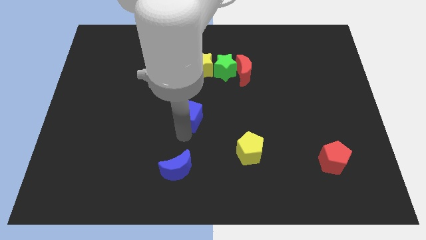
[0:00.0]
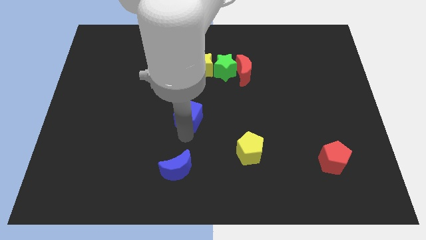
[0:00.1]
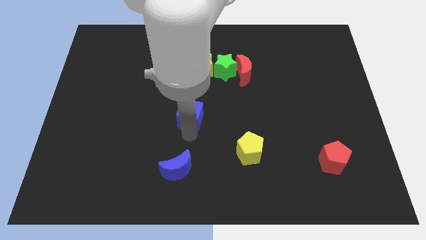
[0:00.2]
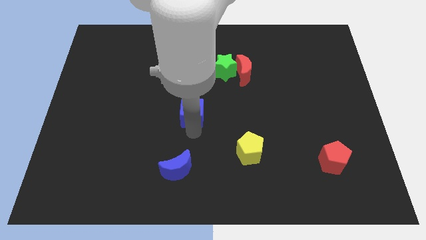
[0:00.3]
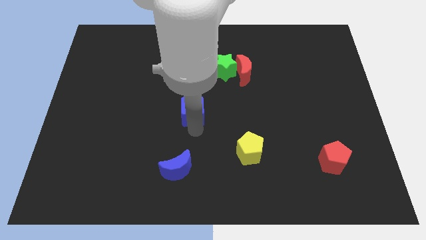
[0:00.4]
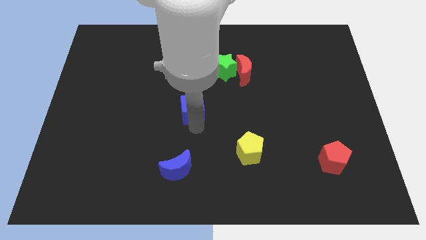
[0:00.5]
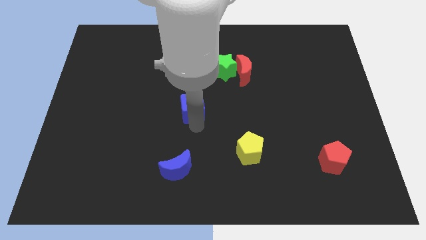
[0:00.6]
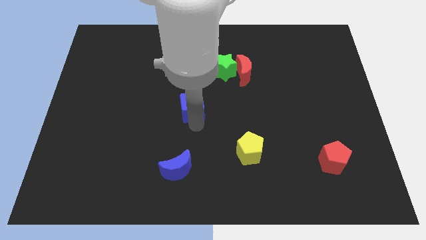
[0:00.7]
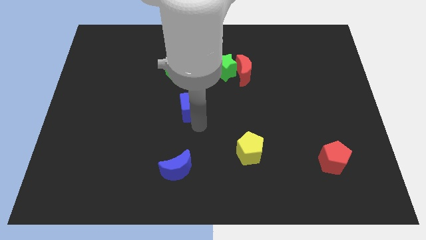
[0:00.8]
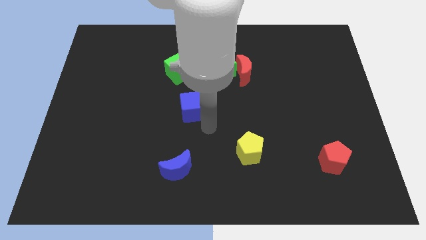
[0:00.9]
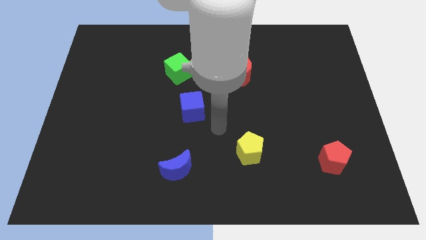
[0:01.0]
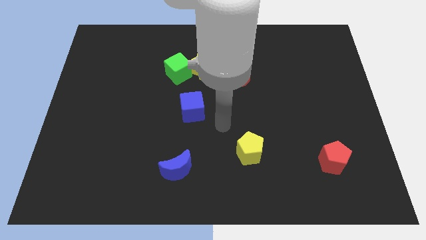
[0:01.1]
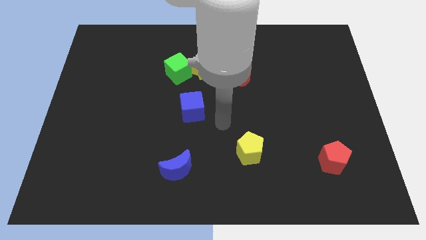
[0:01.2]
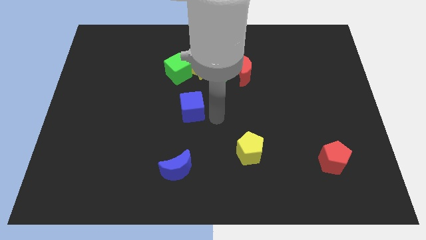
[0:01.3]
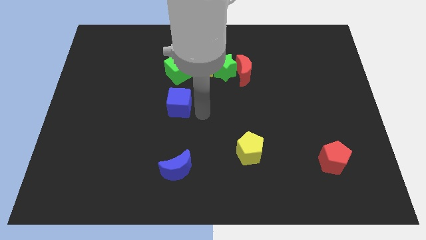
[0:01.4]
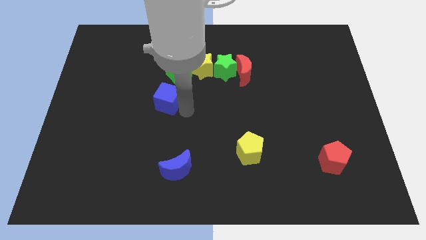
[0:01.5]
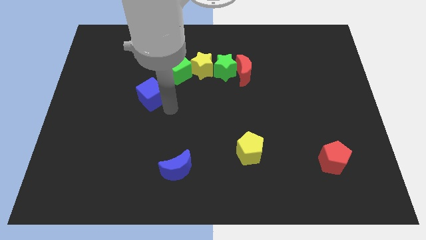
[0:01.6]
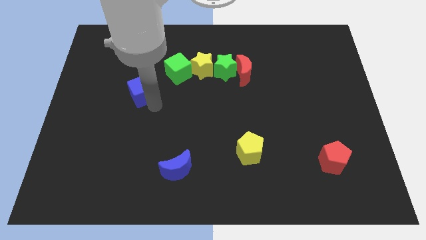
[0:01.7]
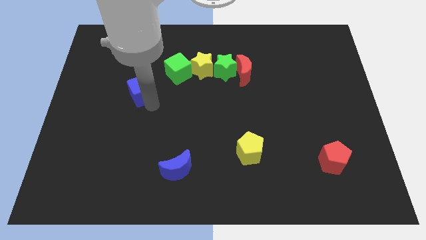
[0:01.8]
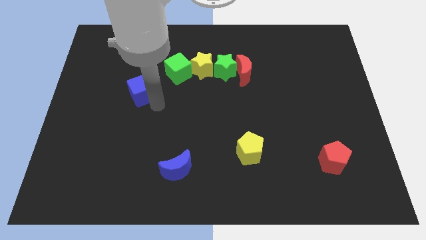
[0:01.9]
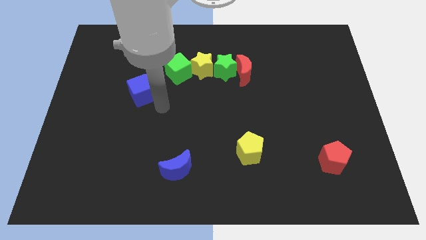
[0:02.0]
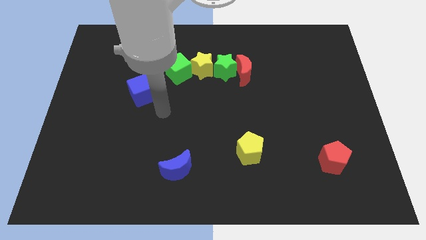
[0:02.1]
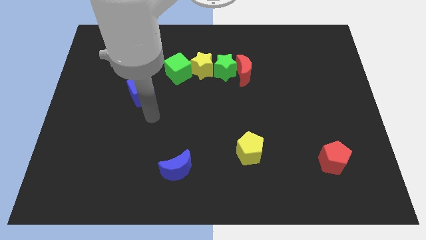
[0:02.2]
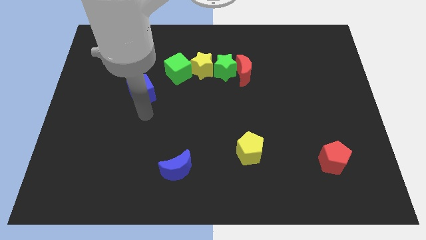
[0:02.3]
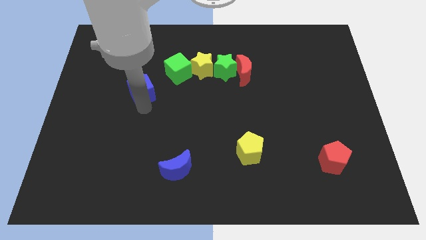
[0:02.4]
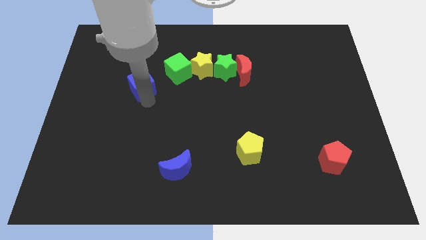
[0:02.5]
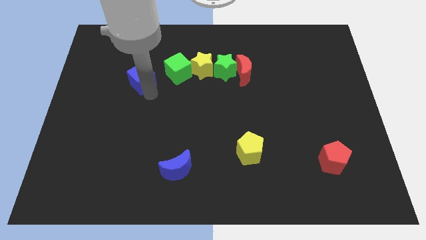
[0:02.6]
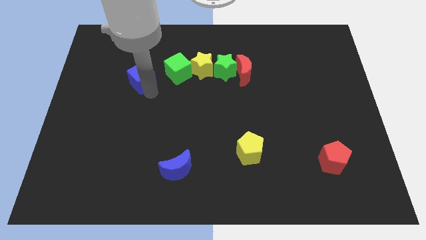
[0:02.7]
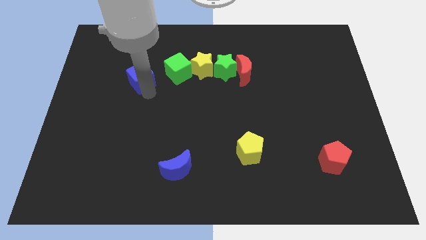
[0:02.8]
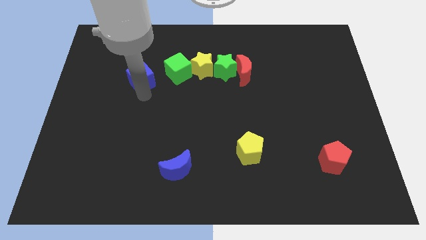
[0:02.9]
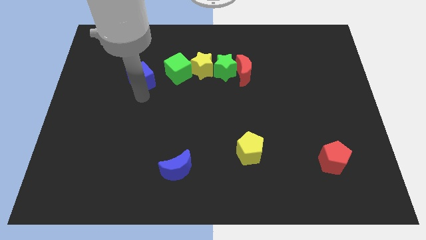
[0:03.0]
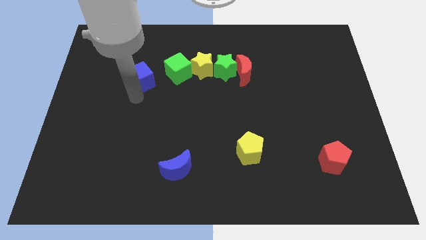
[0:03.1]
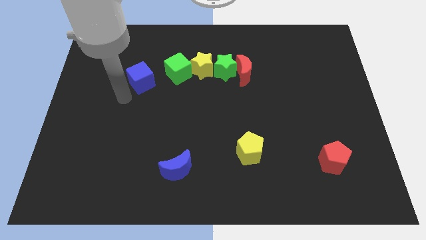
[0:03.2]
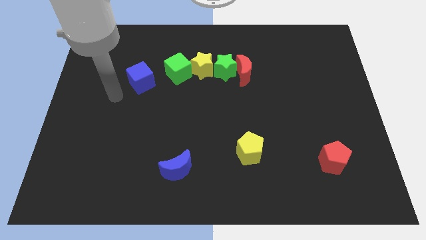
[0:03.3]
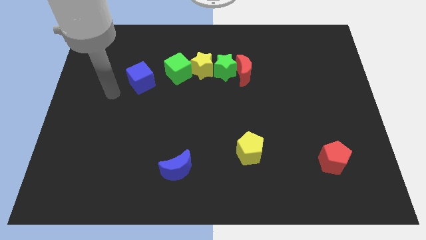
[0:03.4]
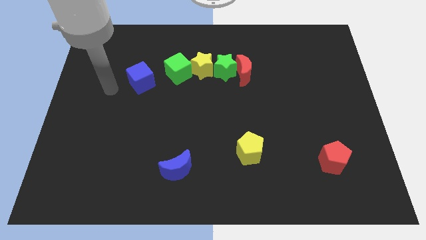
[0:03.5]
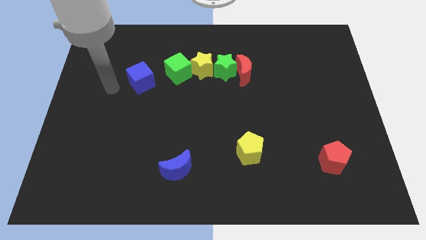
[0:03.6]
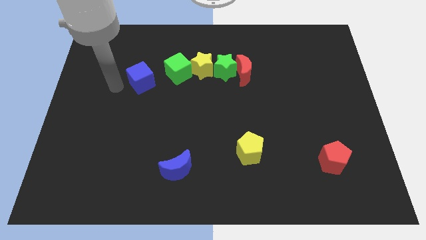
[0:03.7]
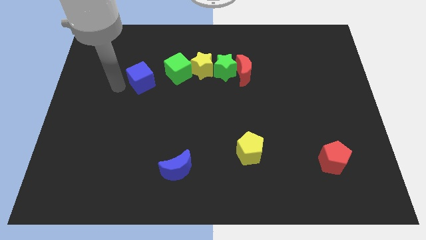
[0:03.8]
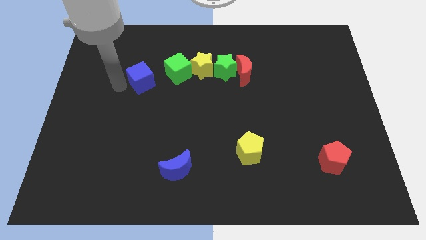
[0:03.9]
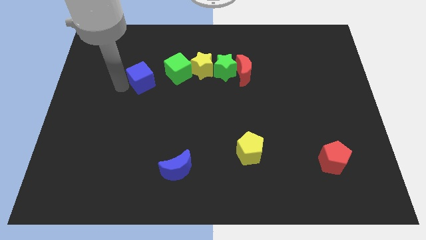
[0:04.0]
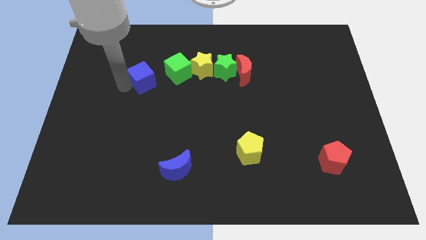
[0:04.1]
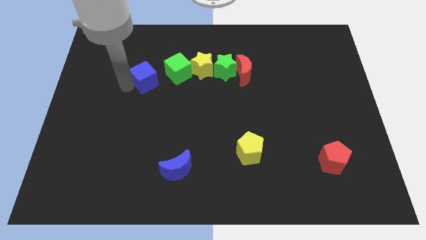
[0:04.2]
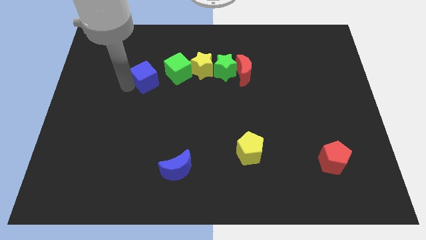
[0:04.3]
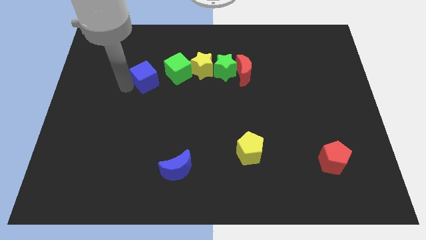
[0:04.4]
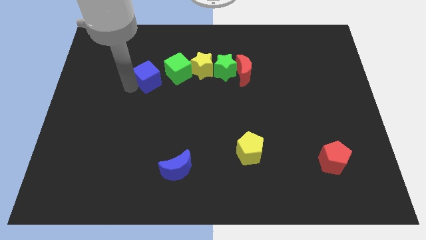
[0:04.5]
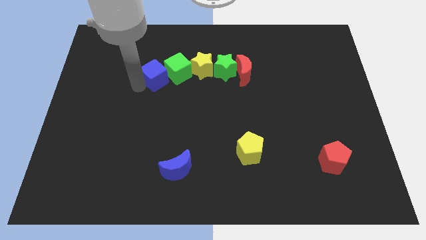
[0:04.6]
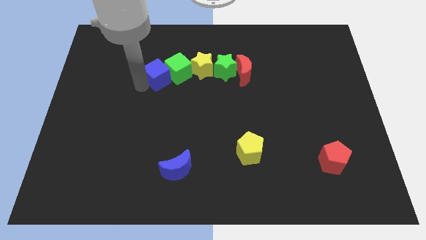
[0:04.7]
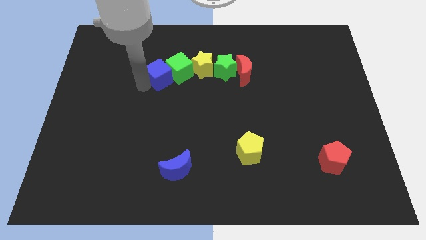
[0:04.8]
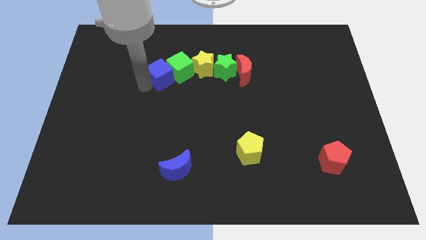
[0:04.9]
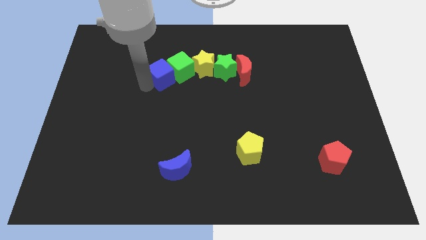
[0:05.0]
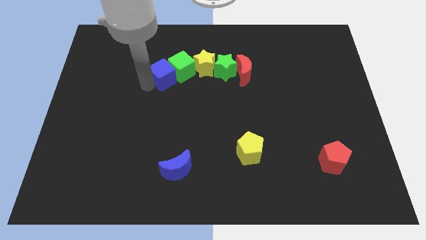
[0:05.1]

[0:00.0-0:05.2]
place the blue cube left to the green star

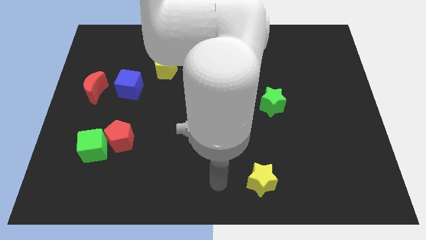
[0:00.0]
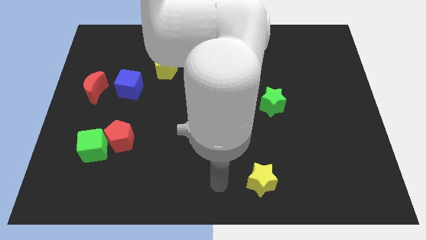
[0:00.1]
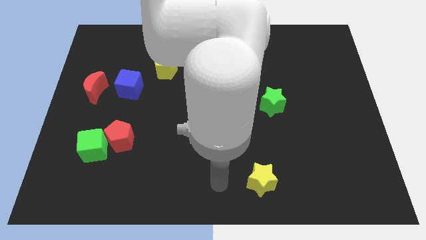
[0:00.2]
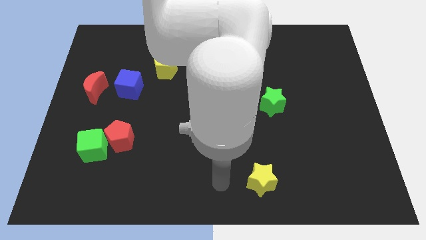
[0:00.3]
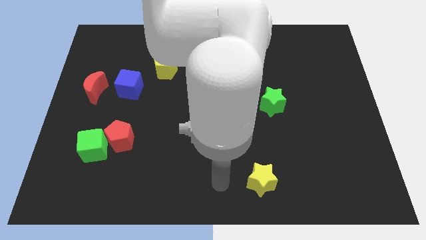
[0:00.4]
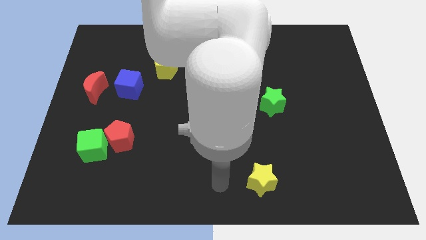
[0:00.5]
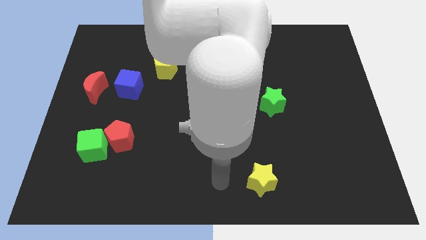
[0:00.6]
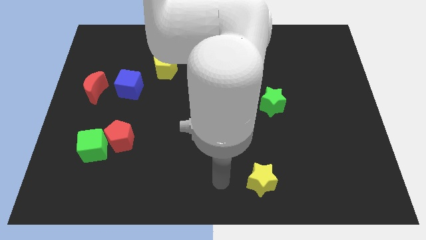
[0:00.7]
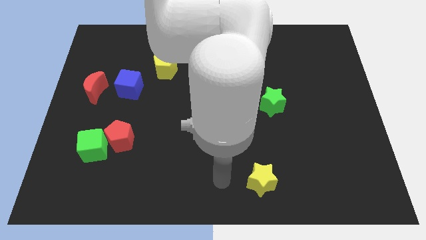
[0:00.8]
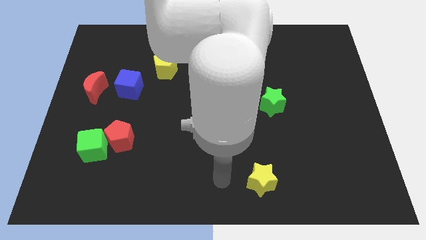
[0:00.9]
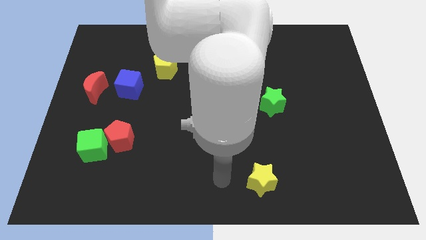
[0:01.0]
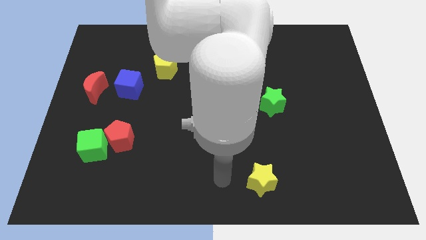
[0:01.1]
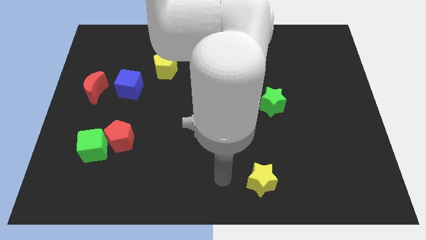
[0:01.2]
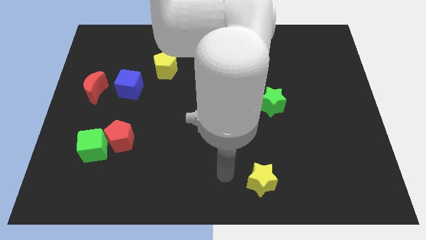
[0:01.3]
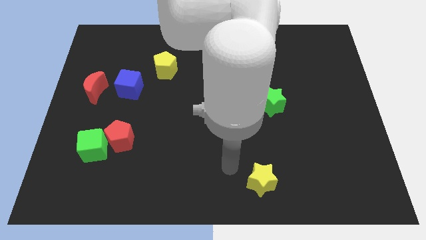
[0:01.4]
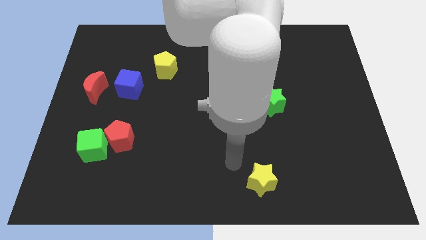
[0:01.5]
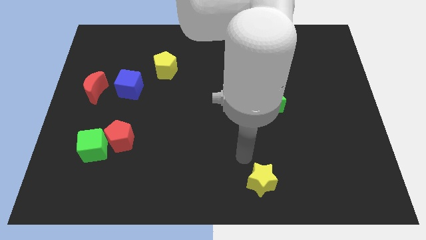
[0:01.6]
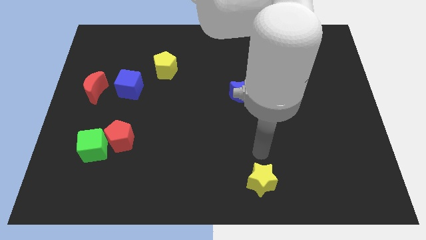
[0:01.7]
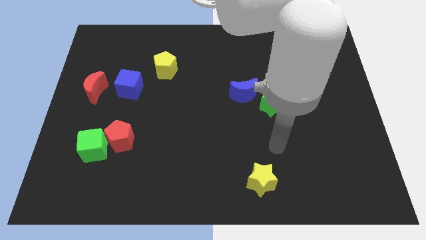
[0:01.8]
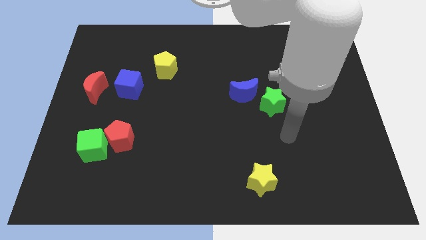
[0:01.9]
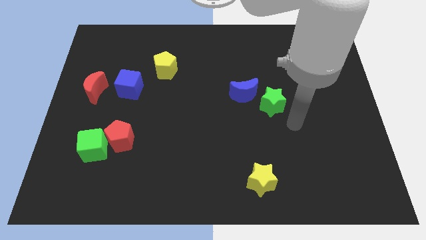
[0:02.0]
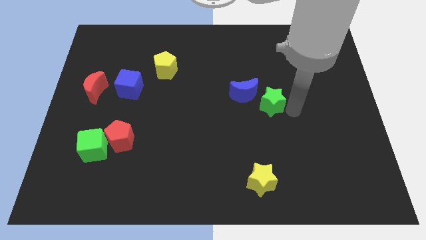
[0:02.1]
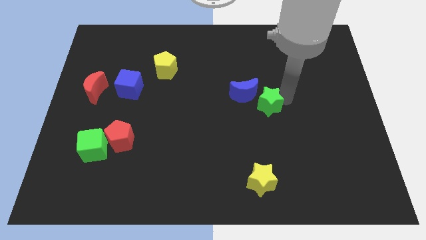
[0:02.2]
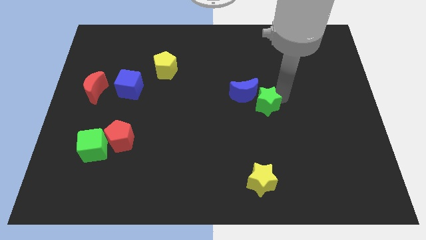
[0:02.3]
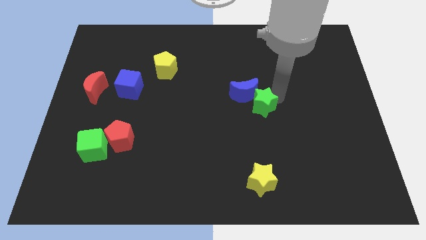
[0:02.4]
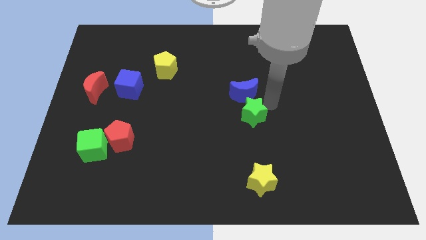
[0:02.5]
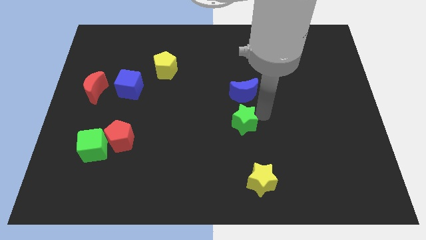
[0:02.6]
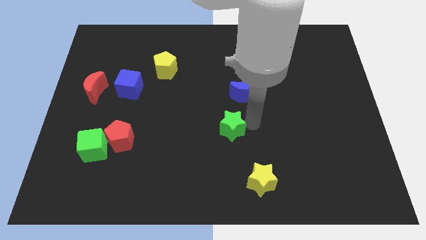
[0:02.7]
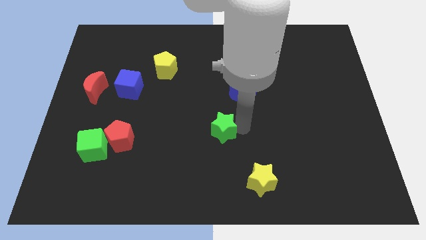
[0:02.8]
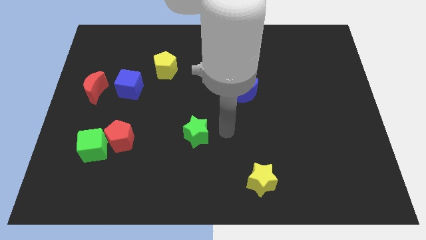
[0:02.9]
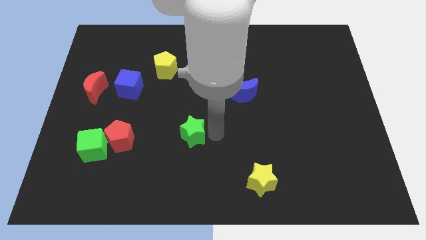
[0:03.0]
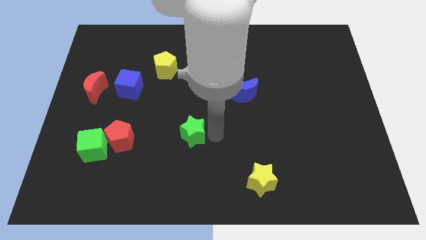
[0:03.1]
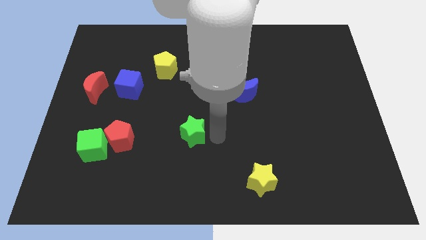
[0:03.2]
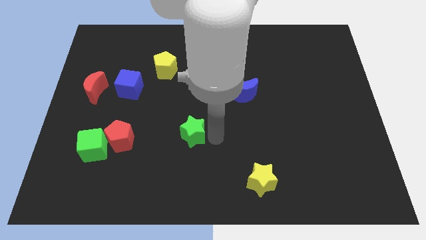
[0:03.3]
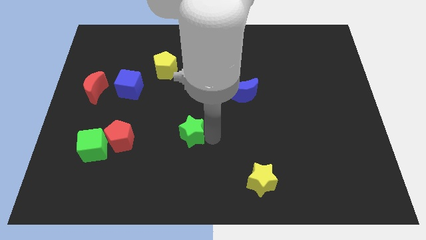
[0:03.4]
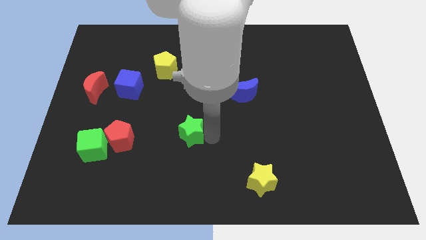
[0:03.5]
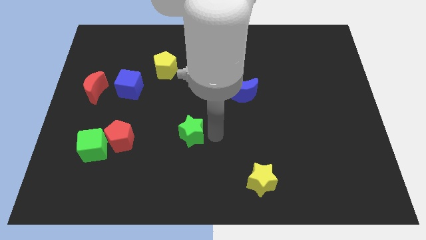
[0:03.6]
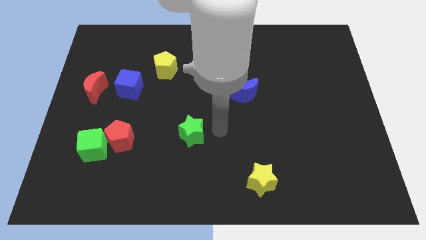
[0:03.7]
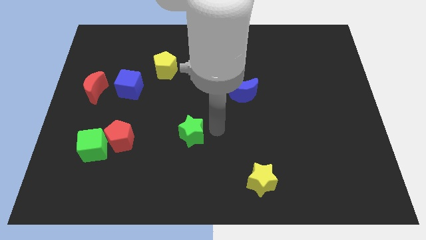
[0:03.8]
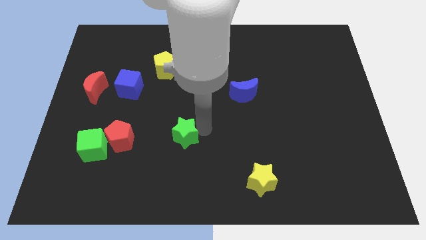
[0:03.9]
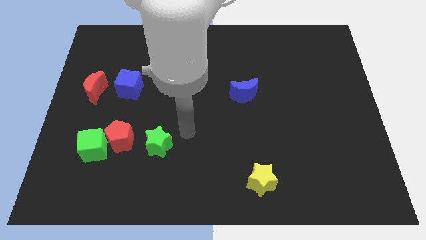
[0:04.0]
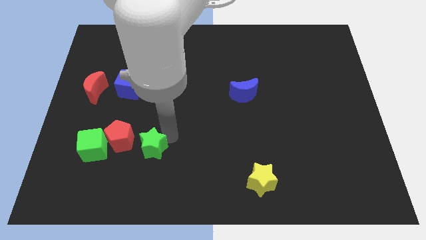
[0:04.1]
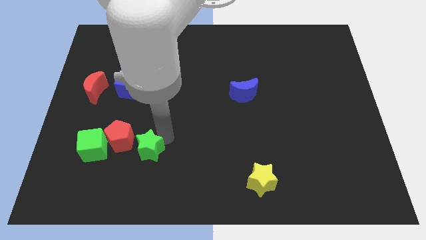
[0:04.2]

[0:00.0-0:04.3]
move the green star away from the blue crescent
